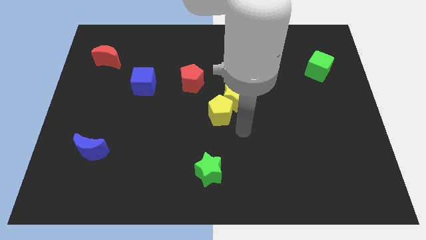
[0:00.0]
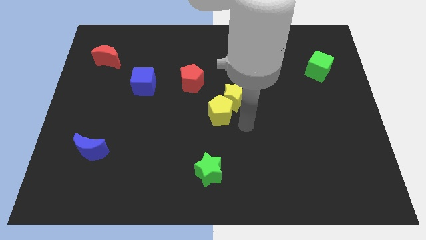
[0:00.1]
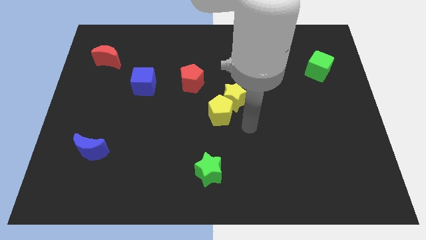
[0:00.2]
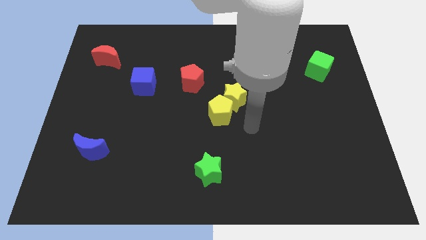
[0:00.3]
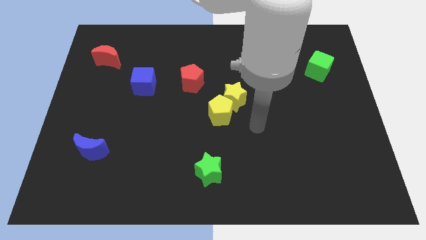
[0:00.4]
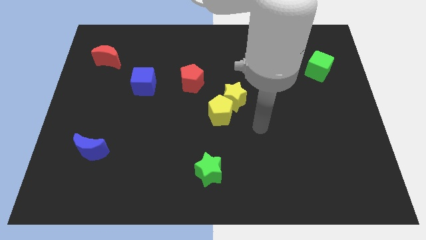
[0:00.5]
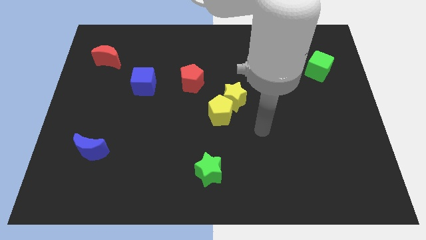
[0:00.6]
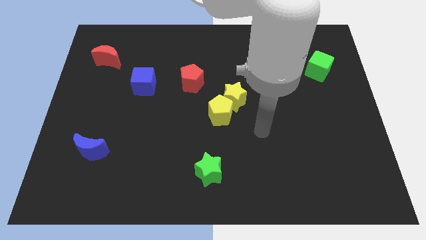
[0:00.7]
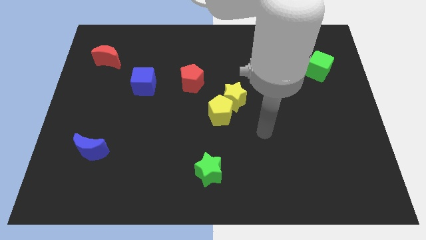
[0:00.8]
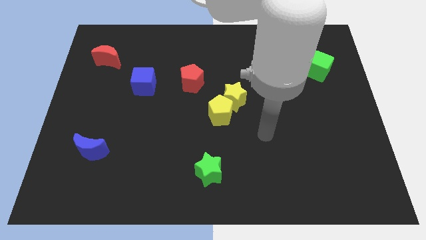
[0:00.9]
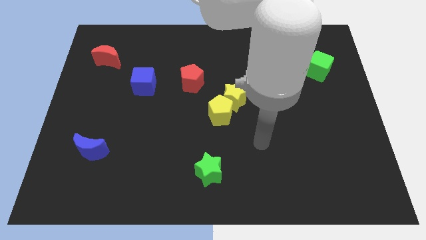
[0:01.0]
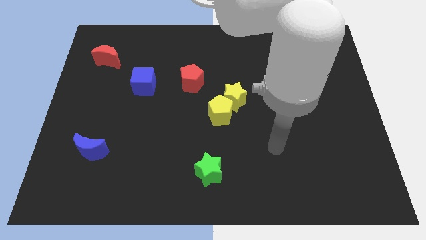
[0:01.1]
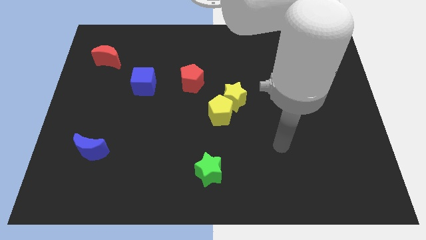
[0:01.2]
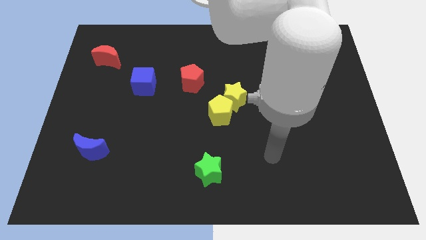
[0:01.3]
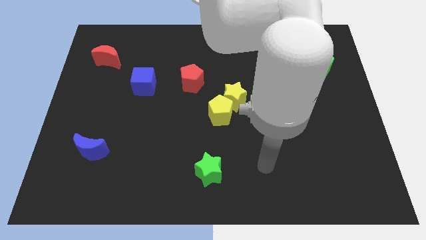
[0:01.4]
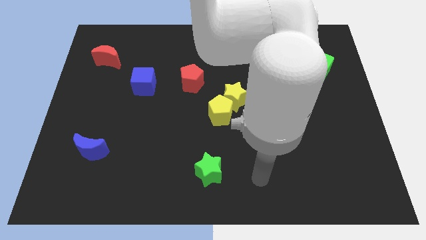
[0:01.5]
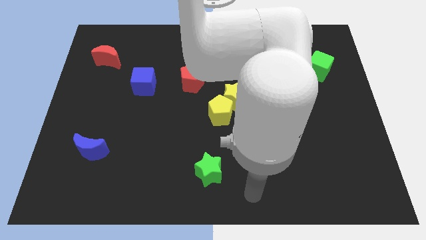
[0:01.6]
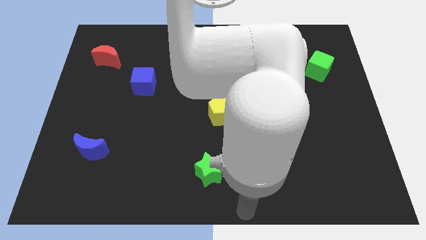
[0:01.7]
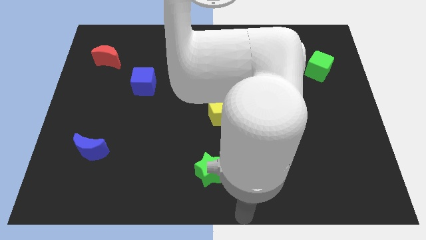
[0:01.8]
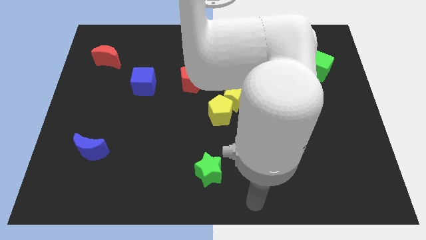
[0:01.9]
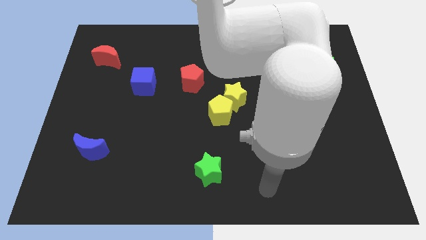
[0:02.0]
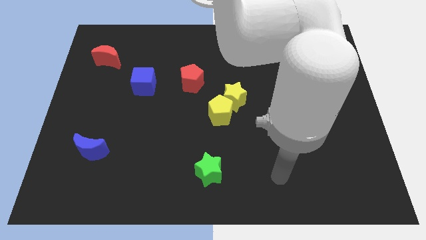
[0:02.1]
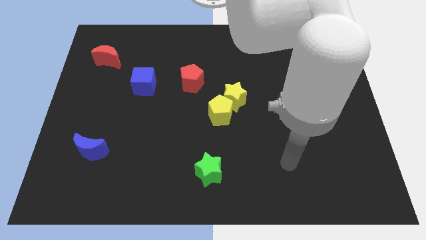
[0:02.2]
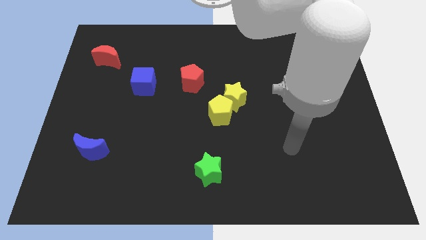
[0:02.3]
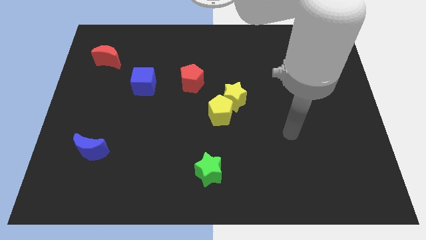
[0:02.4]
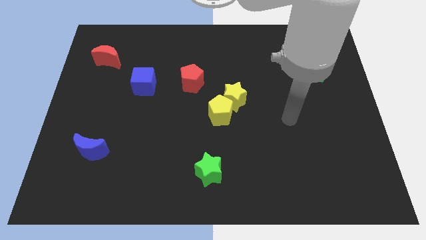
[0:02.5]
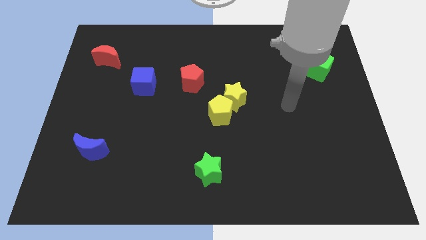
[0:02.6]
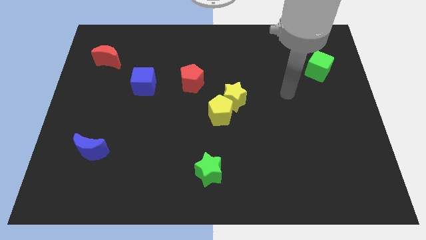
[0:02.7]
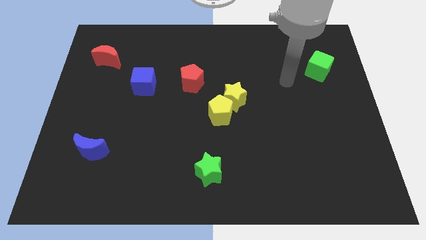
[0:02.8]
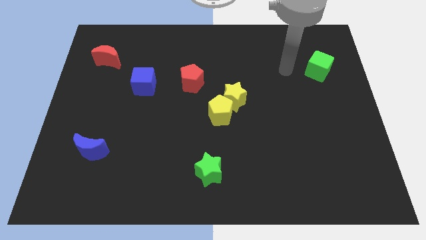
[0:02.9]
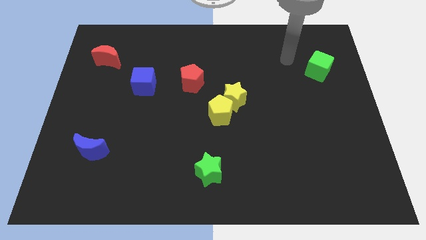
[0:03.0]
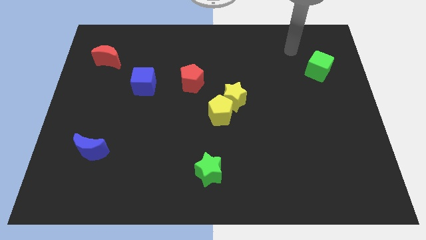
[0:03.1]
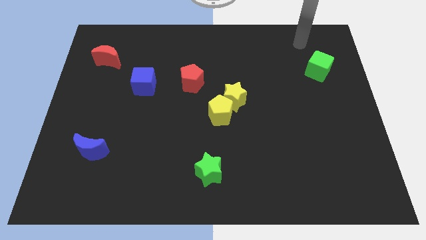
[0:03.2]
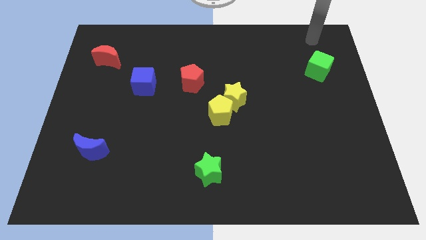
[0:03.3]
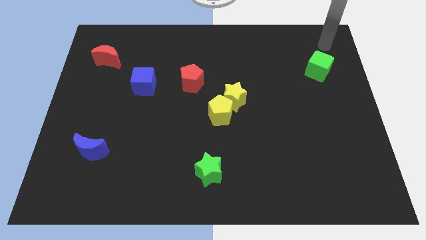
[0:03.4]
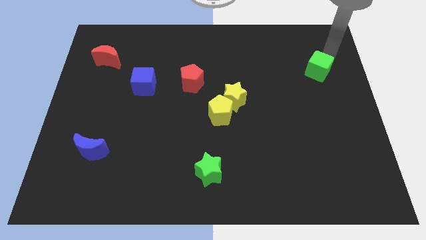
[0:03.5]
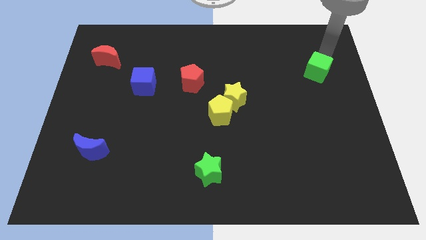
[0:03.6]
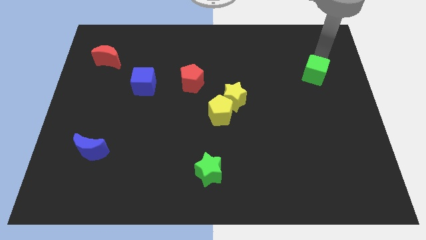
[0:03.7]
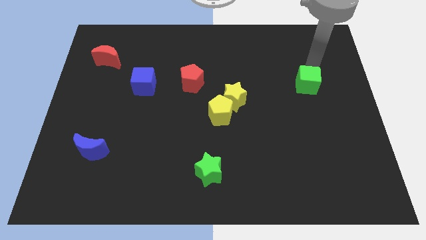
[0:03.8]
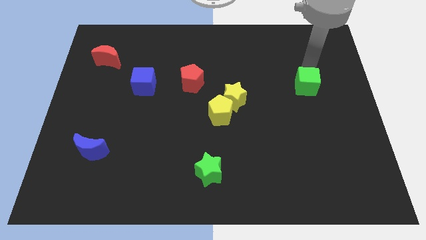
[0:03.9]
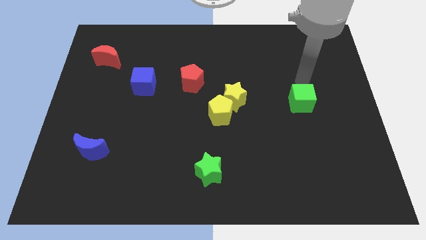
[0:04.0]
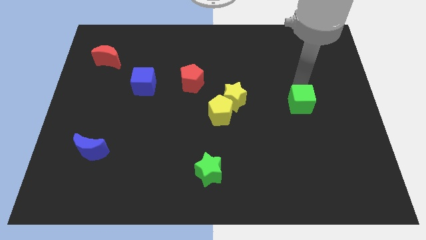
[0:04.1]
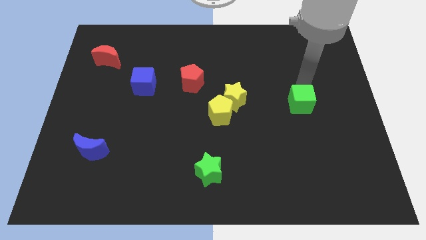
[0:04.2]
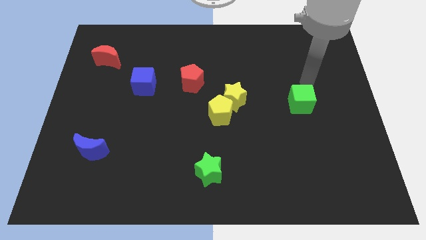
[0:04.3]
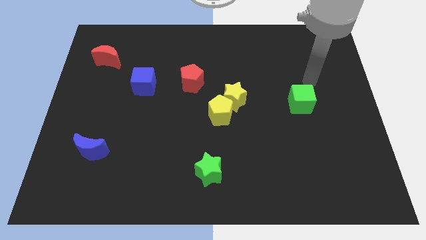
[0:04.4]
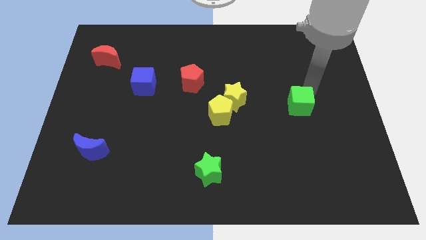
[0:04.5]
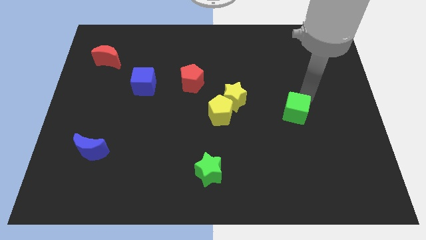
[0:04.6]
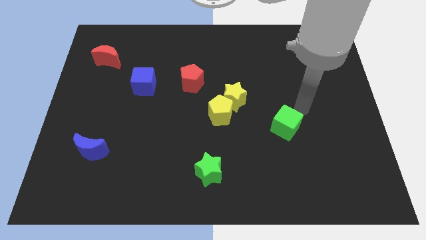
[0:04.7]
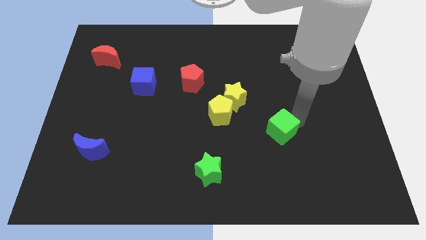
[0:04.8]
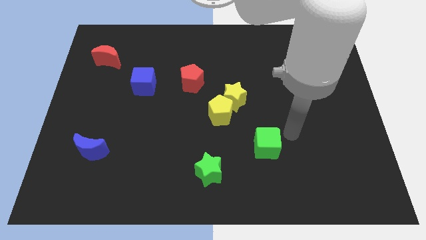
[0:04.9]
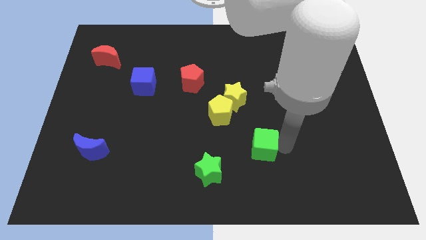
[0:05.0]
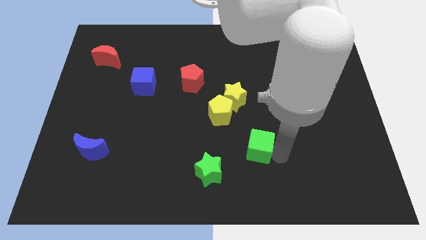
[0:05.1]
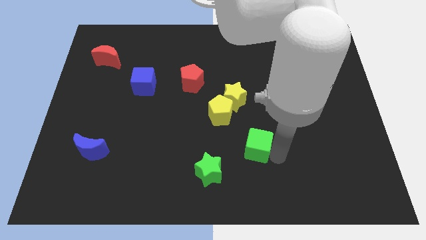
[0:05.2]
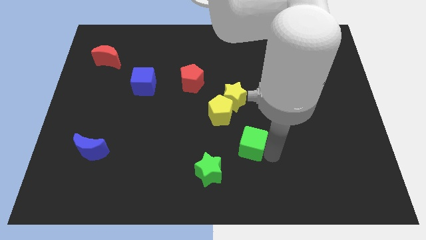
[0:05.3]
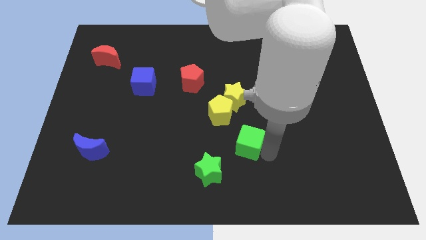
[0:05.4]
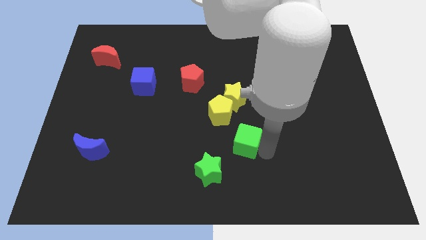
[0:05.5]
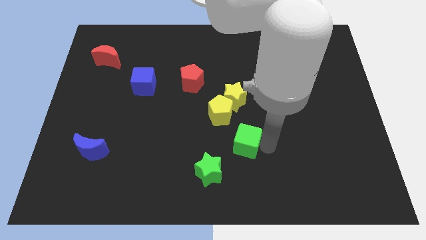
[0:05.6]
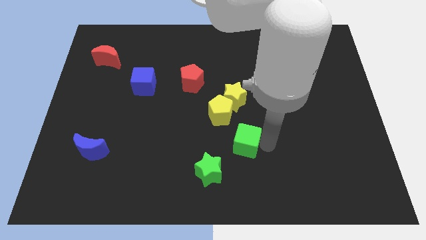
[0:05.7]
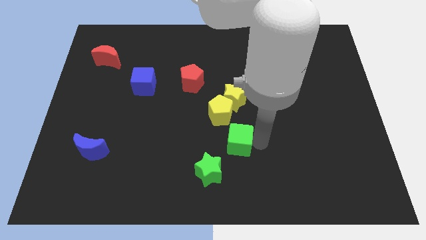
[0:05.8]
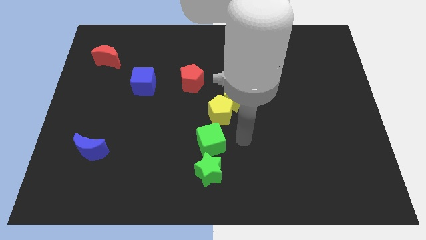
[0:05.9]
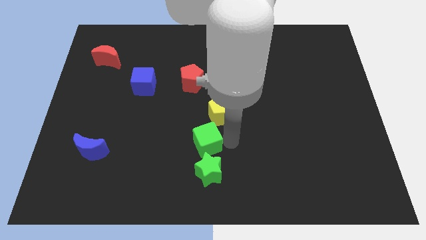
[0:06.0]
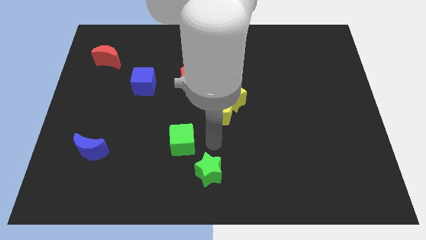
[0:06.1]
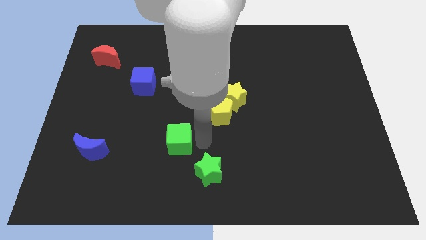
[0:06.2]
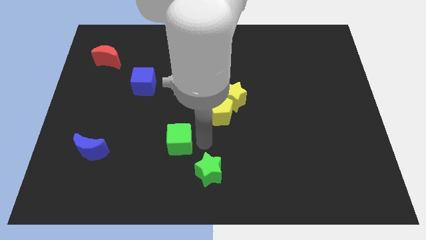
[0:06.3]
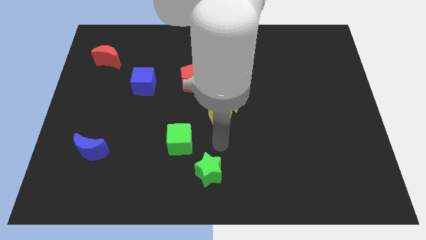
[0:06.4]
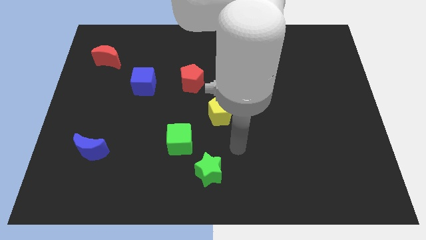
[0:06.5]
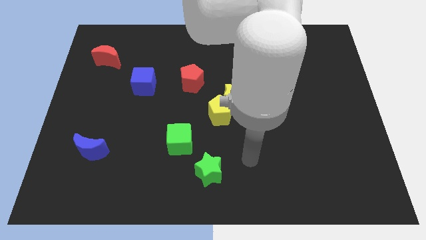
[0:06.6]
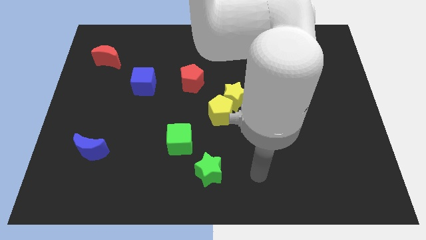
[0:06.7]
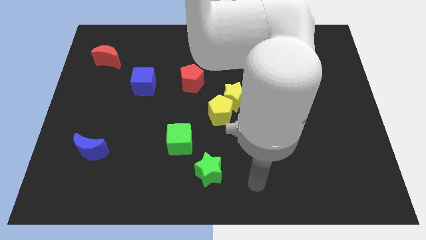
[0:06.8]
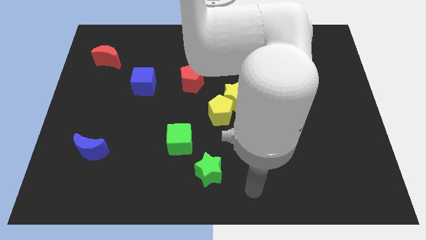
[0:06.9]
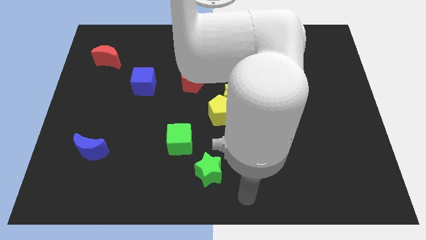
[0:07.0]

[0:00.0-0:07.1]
move the green cube diagonally above the green star

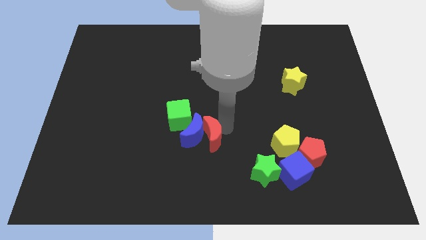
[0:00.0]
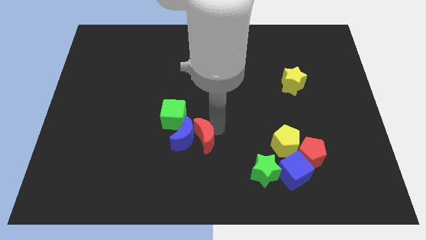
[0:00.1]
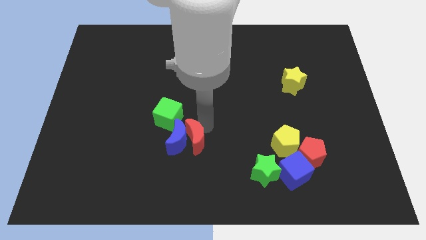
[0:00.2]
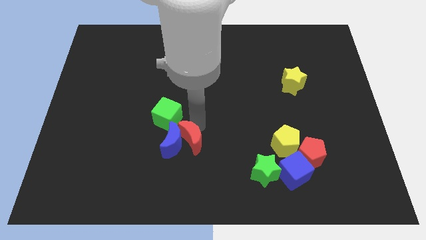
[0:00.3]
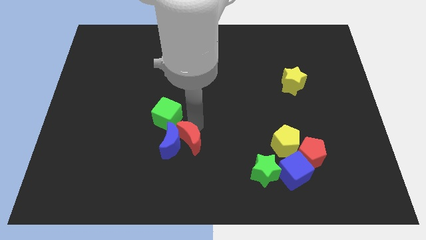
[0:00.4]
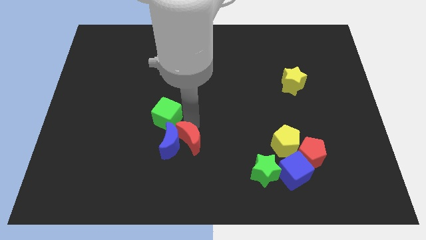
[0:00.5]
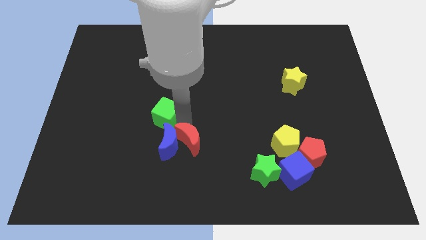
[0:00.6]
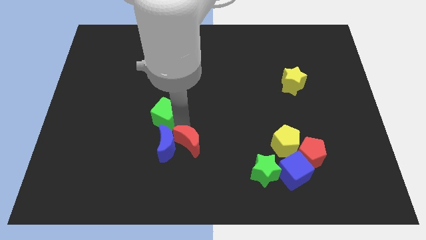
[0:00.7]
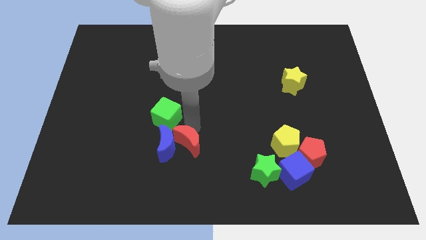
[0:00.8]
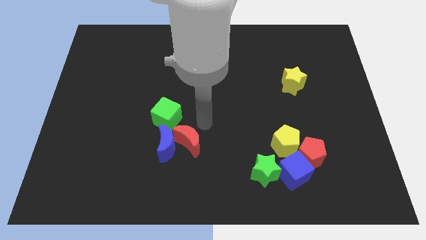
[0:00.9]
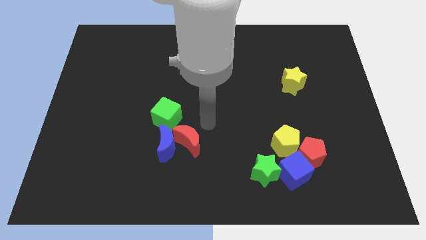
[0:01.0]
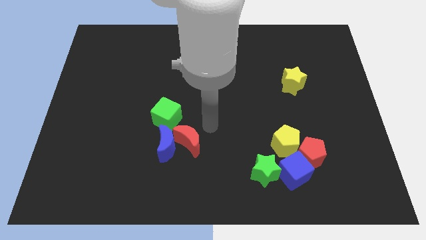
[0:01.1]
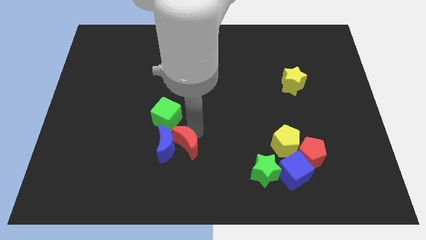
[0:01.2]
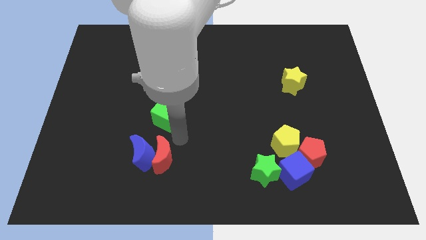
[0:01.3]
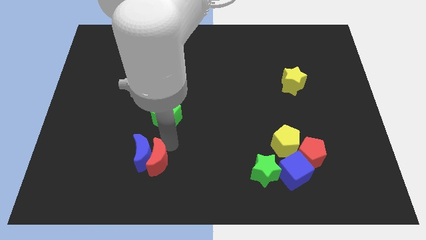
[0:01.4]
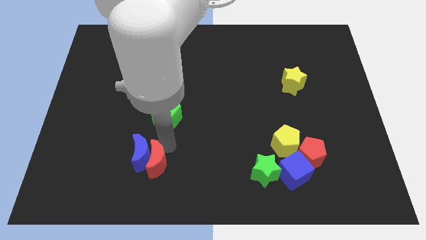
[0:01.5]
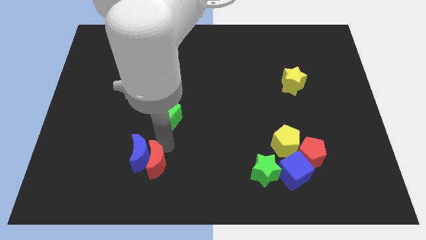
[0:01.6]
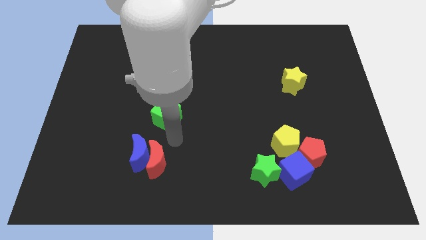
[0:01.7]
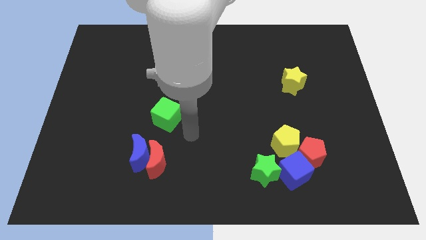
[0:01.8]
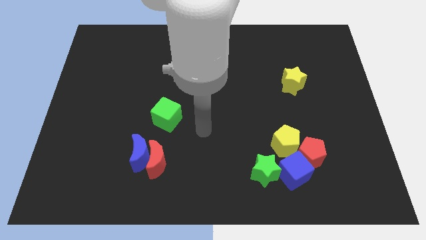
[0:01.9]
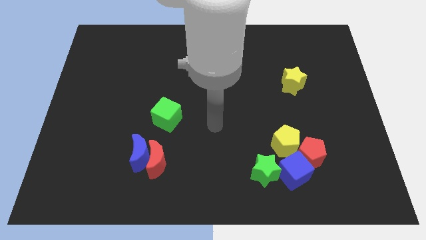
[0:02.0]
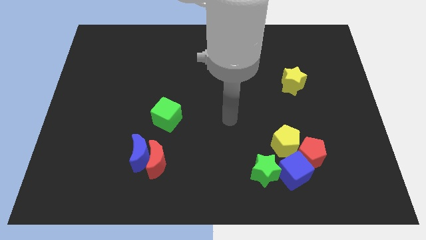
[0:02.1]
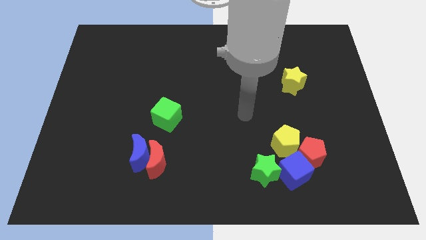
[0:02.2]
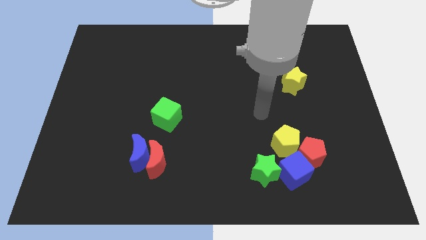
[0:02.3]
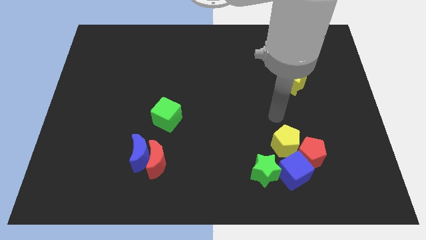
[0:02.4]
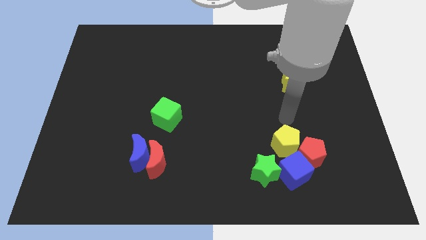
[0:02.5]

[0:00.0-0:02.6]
move the moons diagonally to the bottom left to green cube
